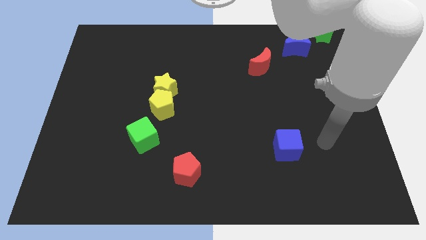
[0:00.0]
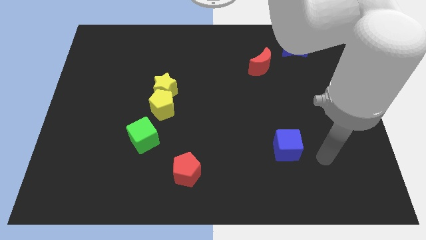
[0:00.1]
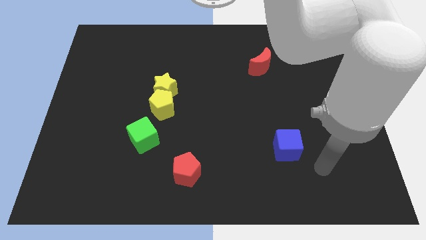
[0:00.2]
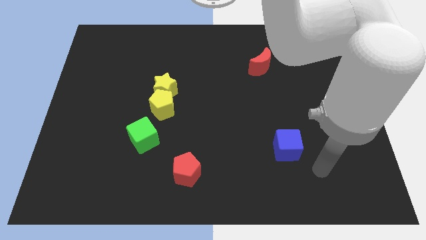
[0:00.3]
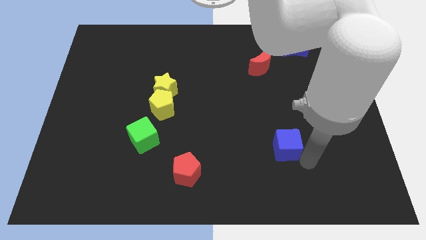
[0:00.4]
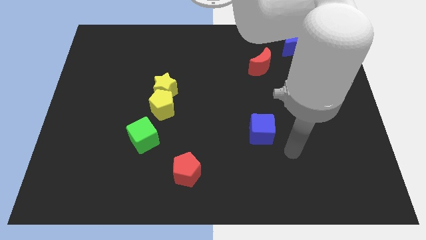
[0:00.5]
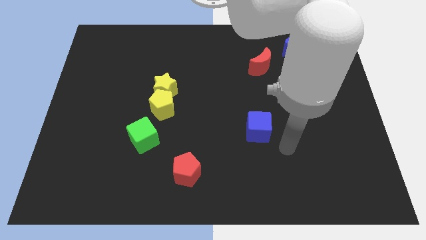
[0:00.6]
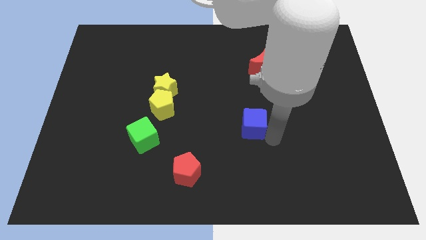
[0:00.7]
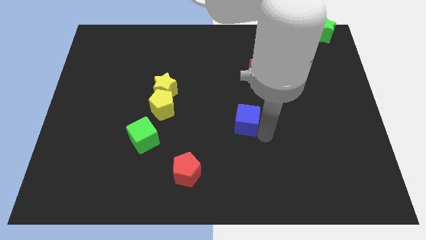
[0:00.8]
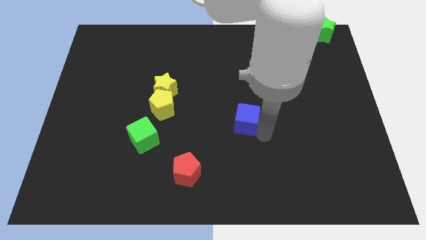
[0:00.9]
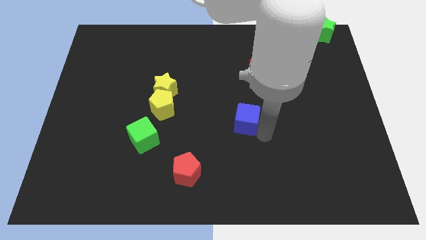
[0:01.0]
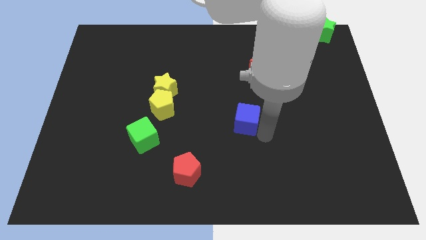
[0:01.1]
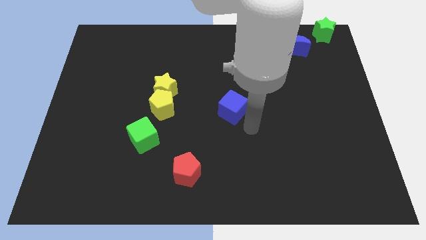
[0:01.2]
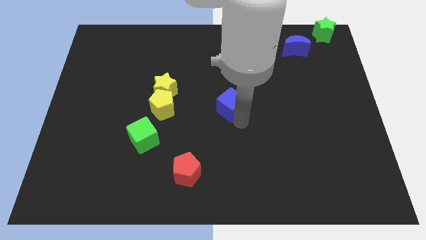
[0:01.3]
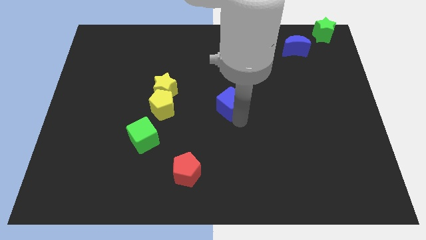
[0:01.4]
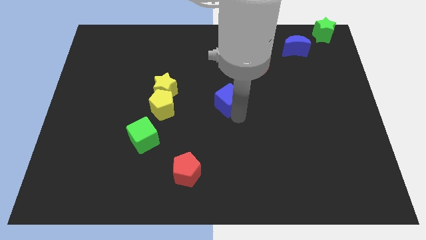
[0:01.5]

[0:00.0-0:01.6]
place blue cube in the center

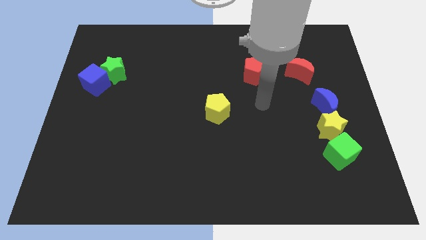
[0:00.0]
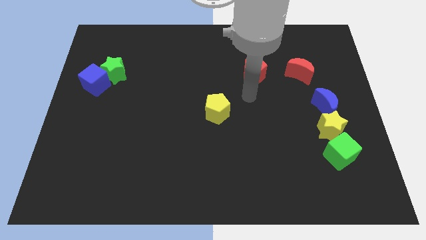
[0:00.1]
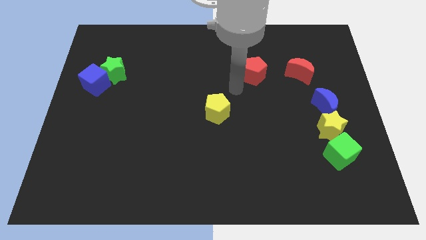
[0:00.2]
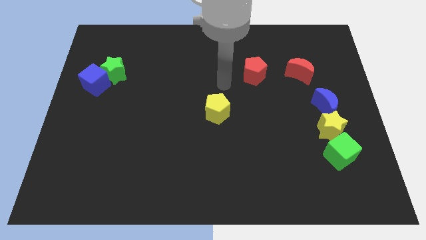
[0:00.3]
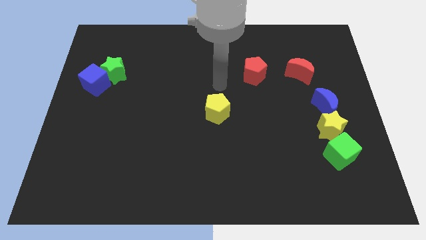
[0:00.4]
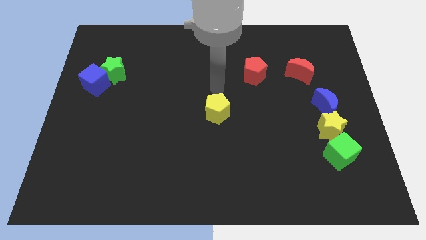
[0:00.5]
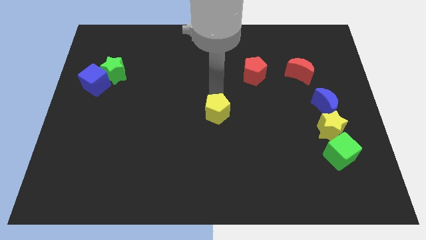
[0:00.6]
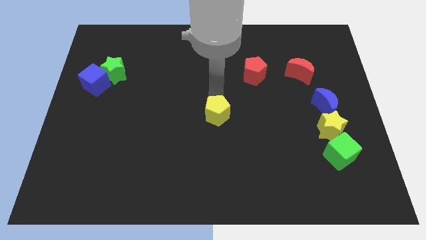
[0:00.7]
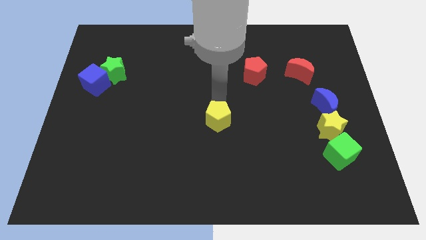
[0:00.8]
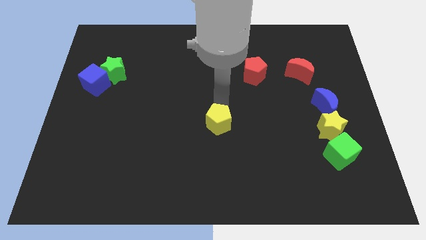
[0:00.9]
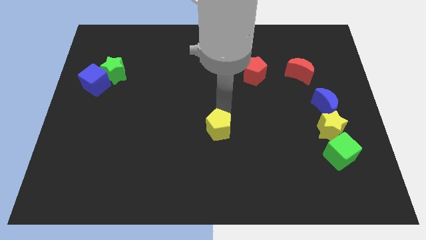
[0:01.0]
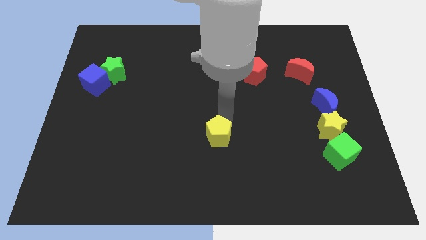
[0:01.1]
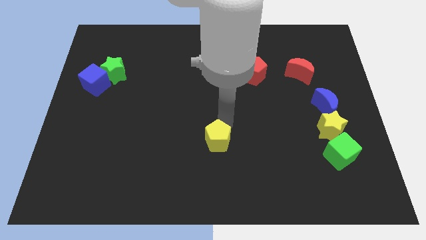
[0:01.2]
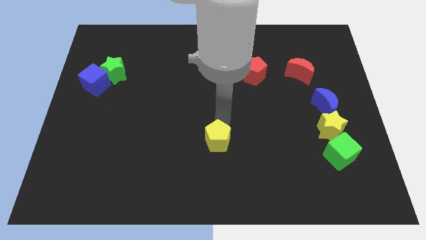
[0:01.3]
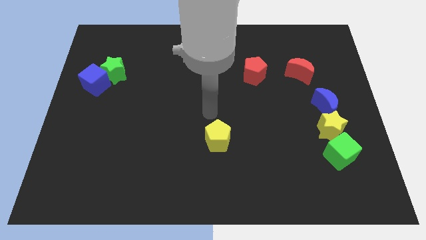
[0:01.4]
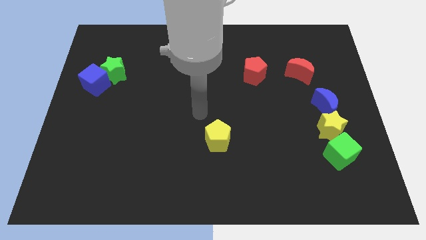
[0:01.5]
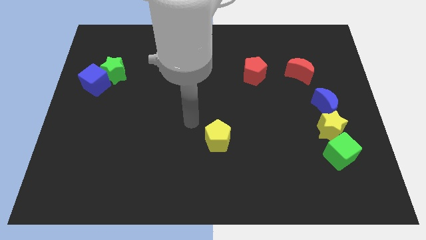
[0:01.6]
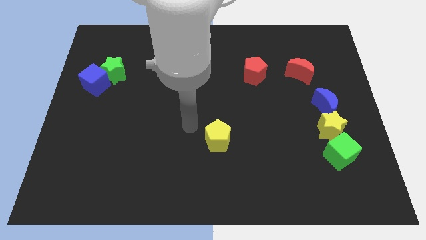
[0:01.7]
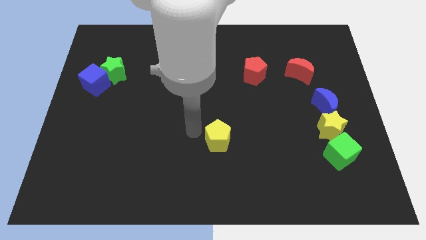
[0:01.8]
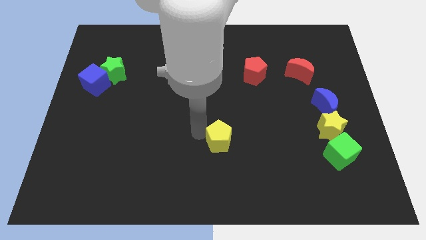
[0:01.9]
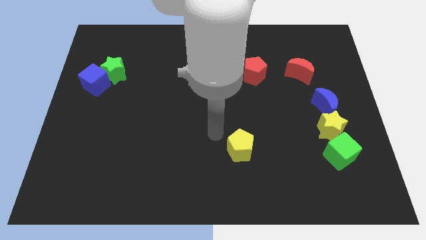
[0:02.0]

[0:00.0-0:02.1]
slide yellow pentagon away from the center

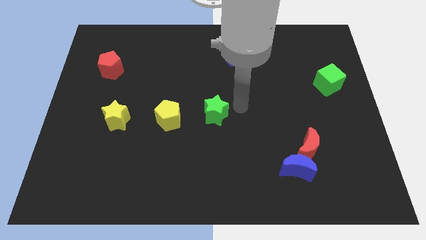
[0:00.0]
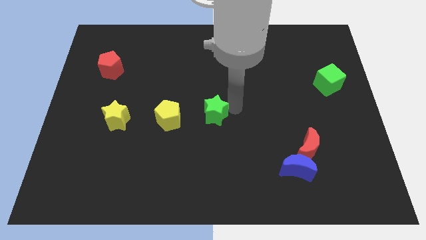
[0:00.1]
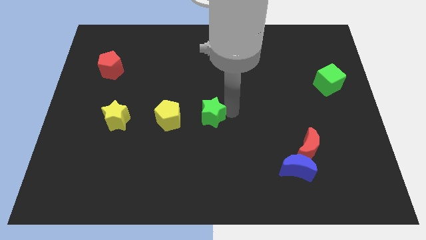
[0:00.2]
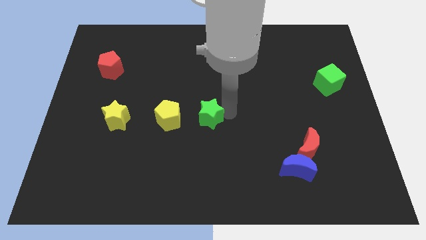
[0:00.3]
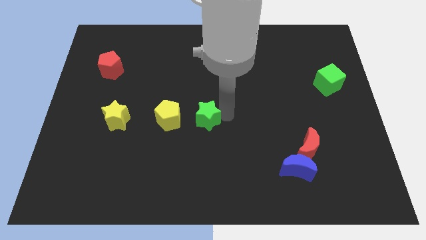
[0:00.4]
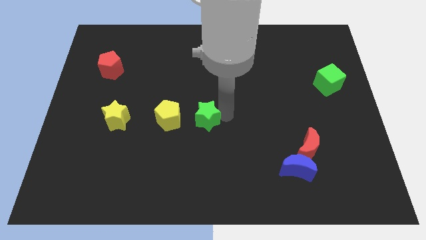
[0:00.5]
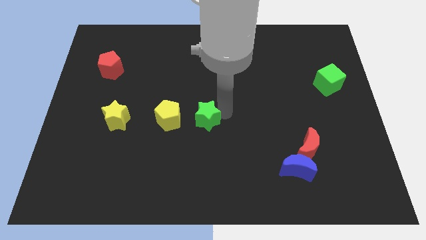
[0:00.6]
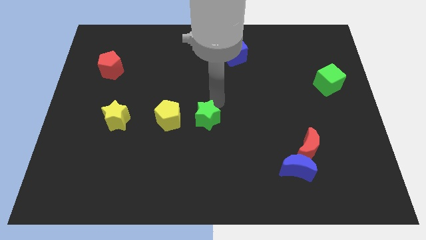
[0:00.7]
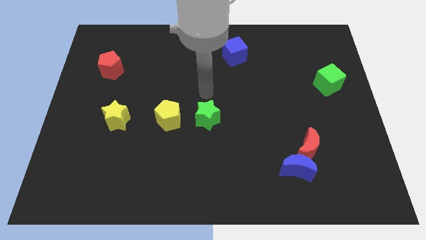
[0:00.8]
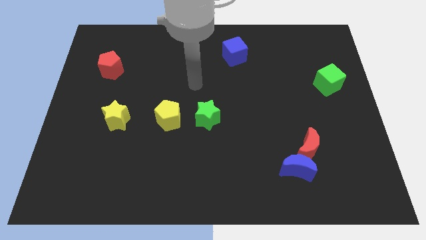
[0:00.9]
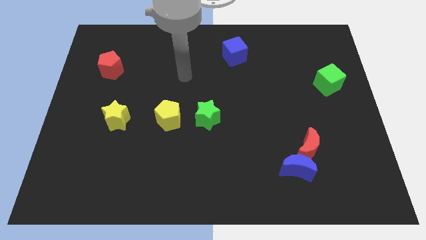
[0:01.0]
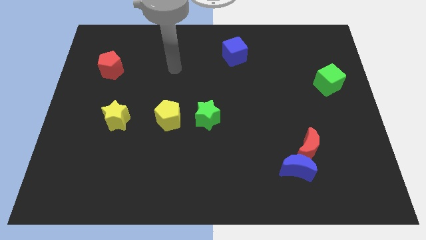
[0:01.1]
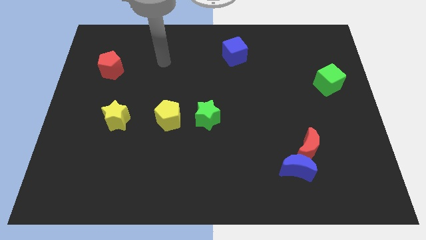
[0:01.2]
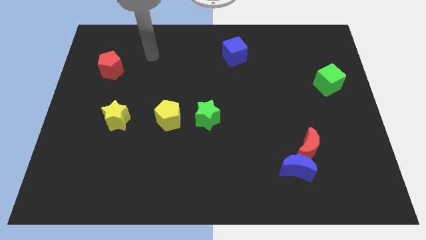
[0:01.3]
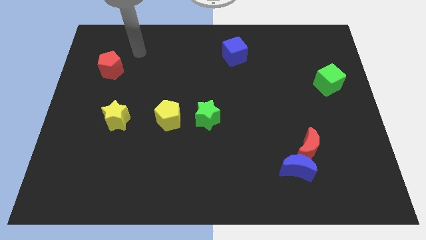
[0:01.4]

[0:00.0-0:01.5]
place the green star to the right of yellow pentagon

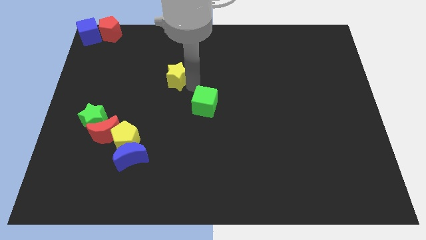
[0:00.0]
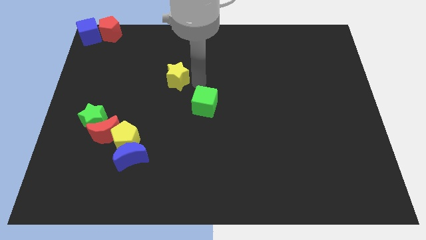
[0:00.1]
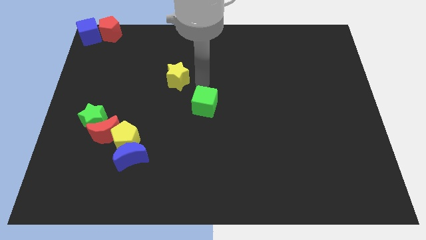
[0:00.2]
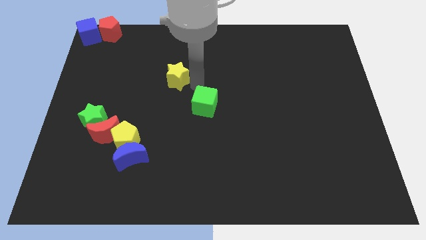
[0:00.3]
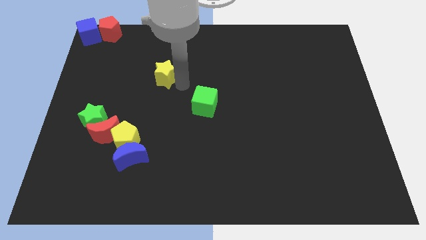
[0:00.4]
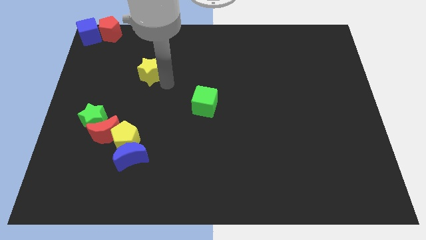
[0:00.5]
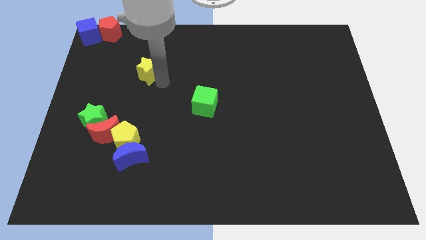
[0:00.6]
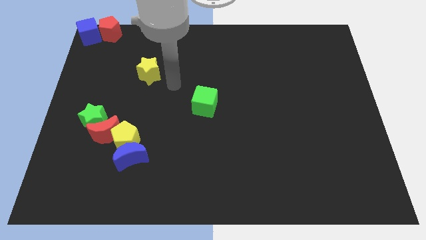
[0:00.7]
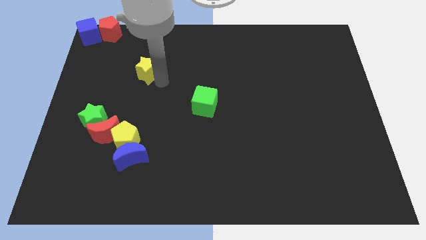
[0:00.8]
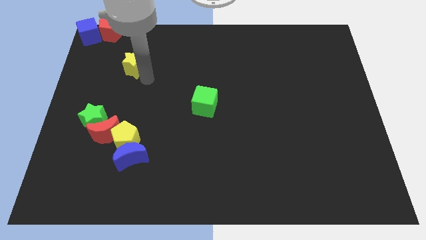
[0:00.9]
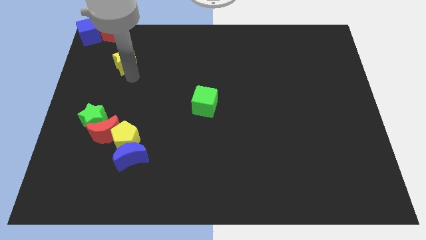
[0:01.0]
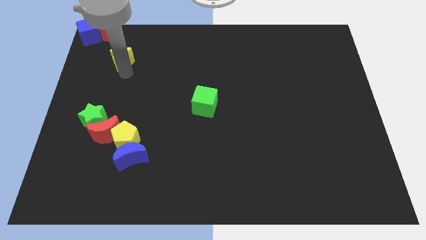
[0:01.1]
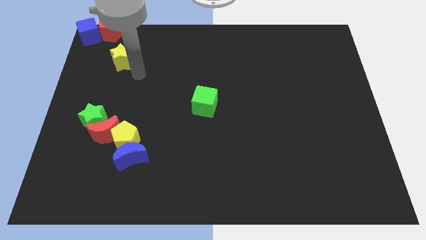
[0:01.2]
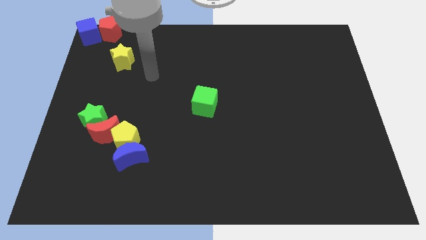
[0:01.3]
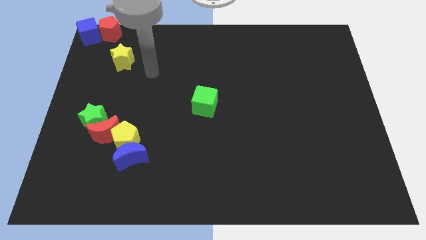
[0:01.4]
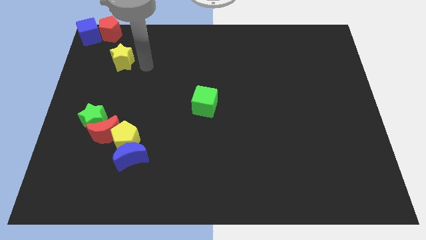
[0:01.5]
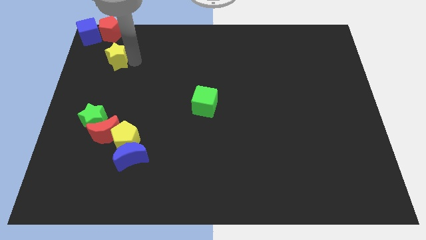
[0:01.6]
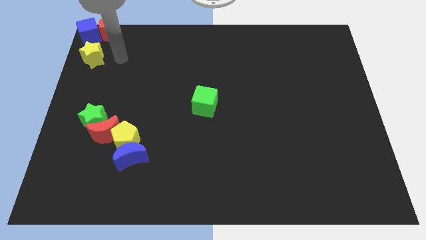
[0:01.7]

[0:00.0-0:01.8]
place the yellow star above the green star

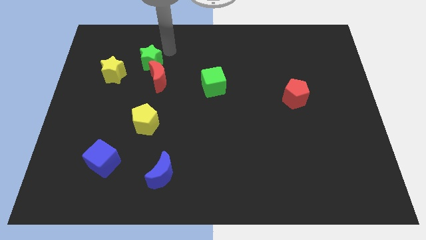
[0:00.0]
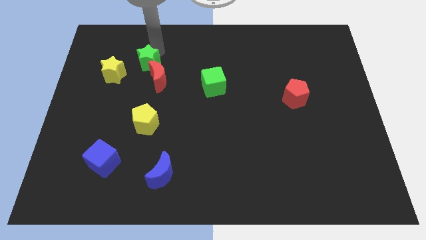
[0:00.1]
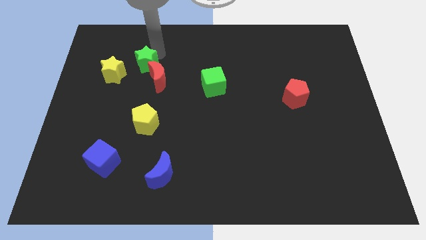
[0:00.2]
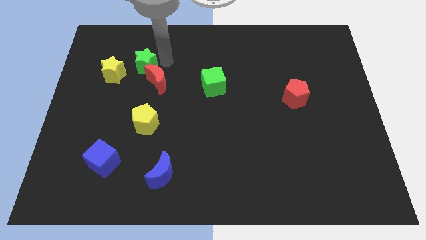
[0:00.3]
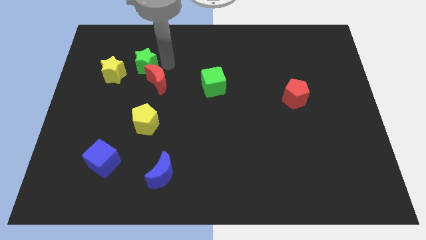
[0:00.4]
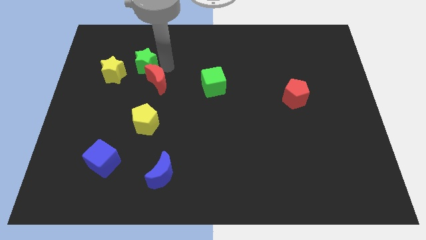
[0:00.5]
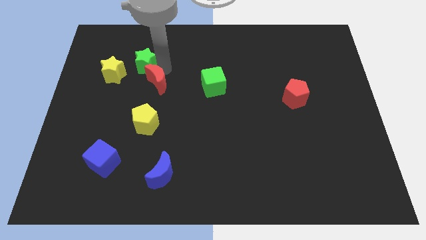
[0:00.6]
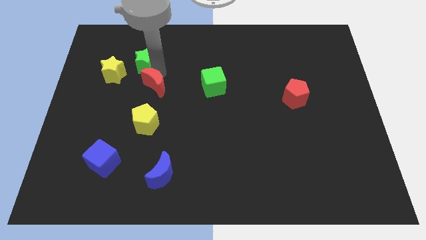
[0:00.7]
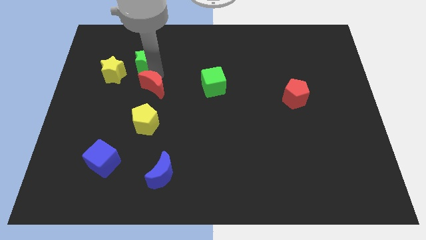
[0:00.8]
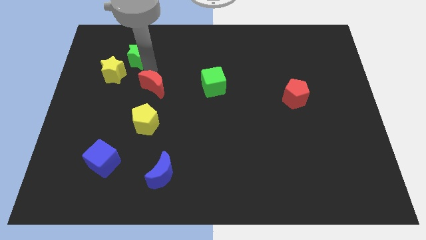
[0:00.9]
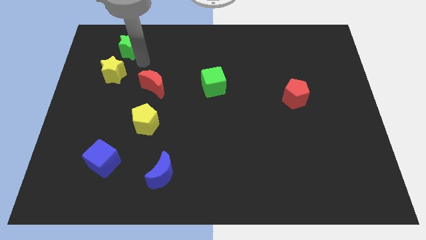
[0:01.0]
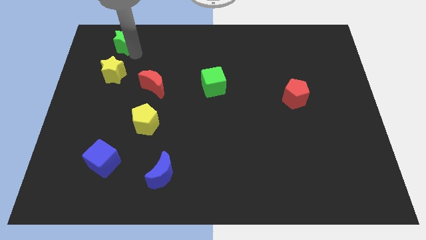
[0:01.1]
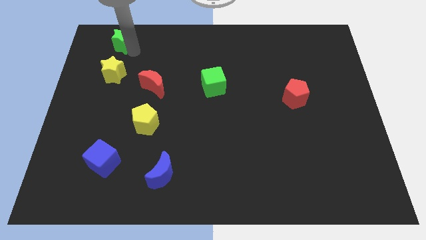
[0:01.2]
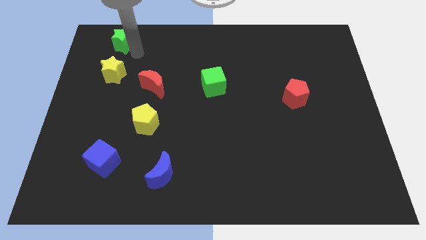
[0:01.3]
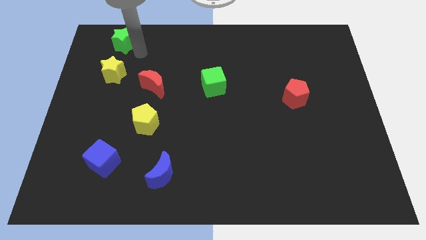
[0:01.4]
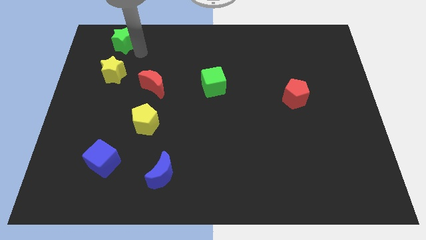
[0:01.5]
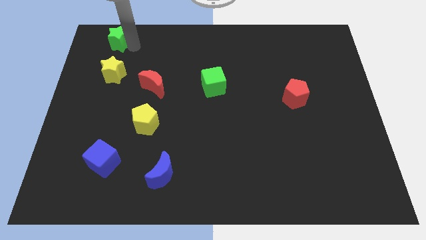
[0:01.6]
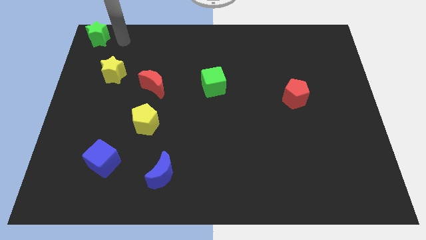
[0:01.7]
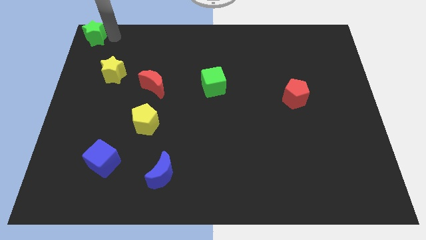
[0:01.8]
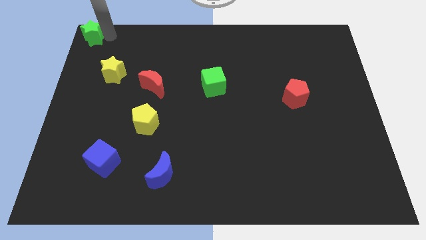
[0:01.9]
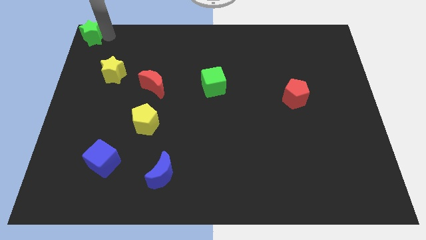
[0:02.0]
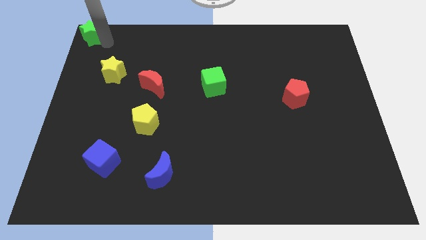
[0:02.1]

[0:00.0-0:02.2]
push the green star towards the top left corner of the board
